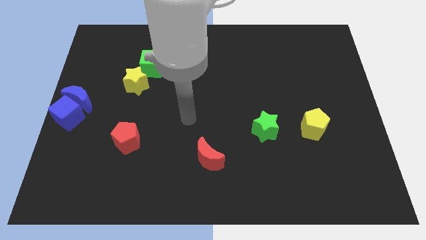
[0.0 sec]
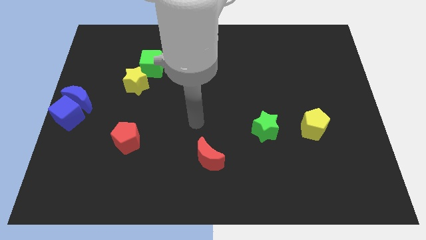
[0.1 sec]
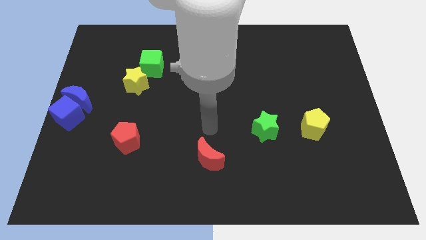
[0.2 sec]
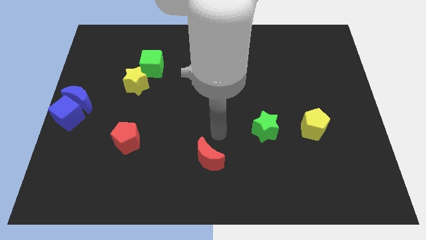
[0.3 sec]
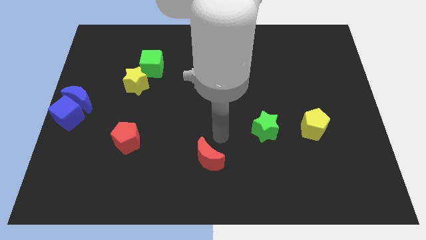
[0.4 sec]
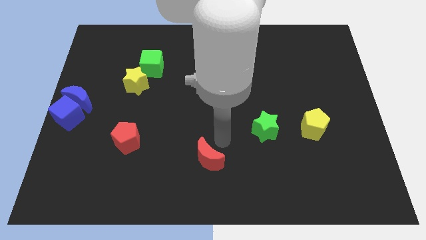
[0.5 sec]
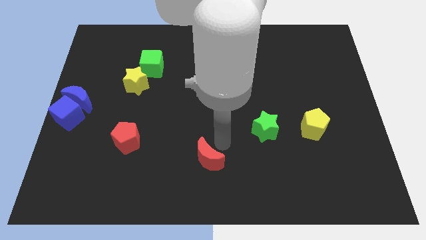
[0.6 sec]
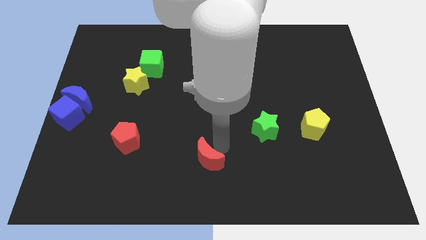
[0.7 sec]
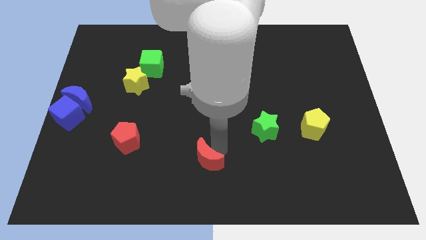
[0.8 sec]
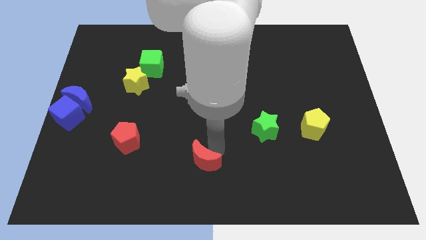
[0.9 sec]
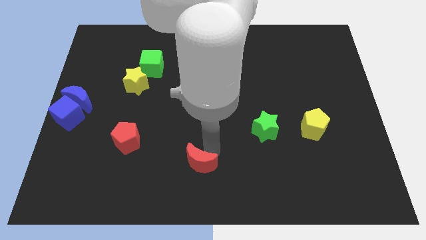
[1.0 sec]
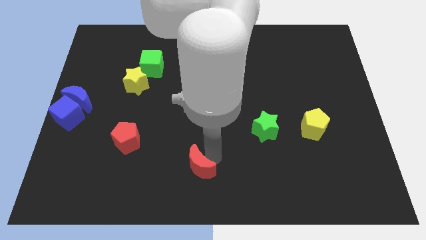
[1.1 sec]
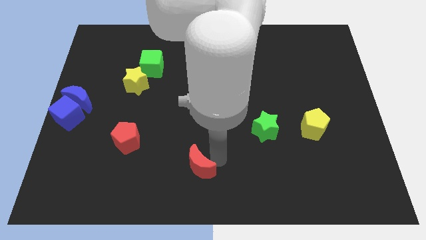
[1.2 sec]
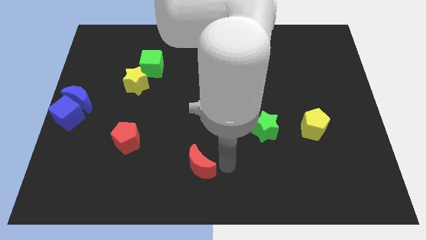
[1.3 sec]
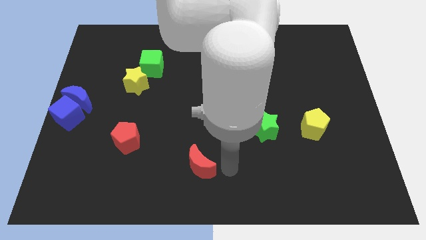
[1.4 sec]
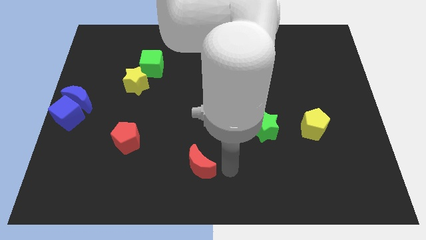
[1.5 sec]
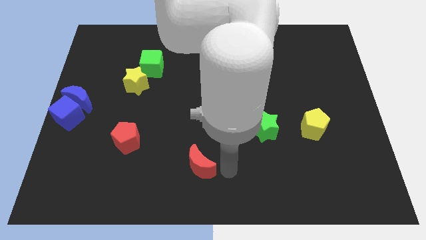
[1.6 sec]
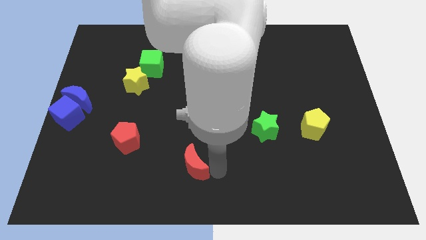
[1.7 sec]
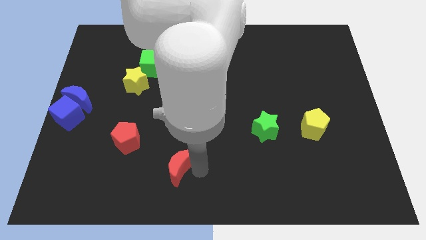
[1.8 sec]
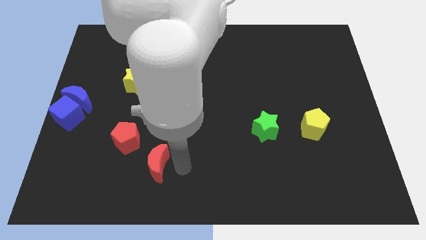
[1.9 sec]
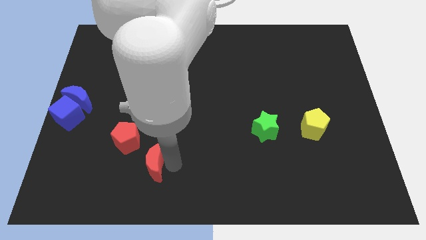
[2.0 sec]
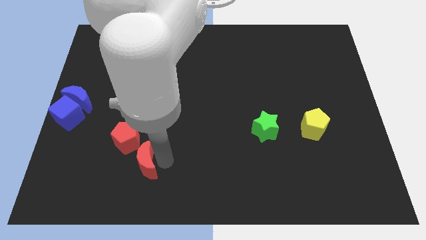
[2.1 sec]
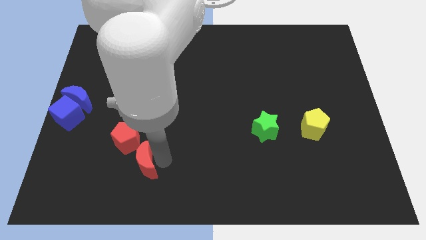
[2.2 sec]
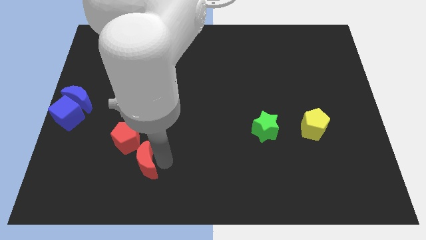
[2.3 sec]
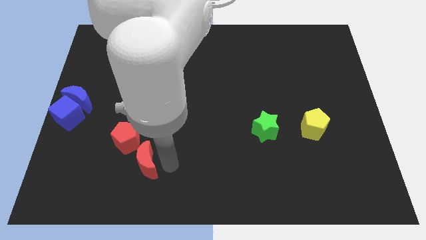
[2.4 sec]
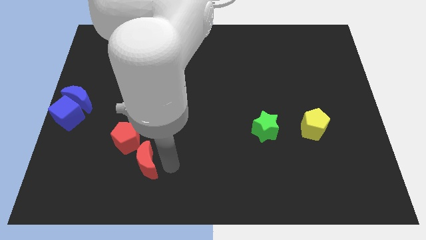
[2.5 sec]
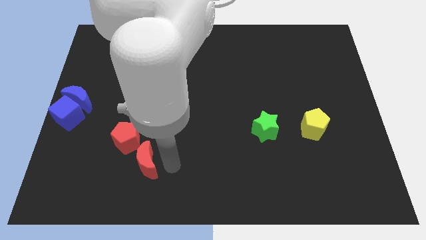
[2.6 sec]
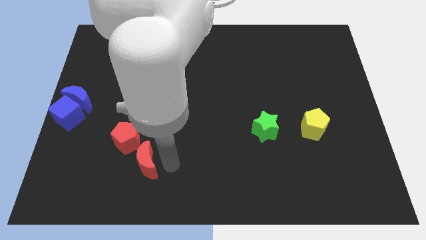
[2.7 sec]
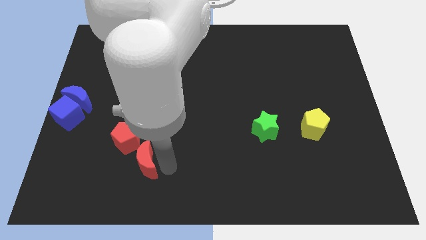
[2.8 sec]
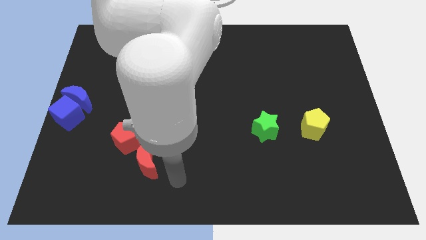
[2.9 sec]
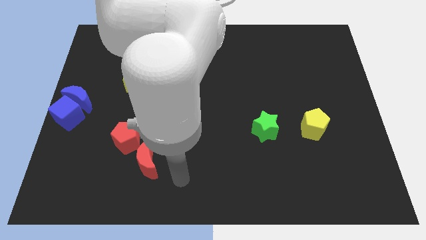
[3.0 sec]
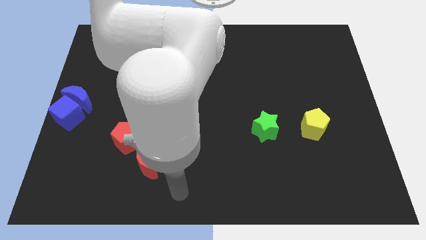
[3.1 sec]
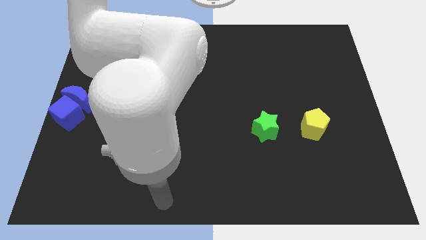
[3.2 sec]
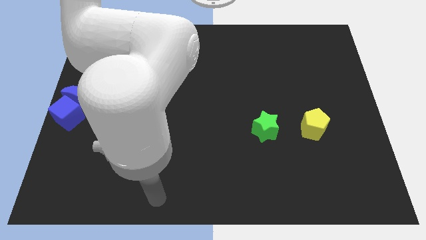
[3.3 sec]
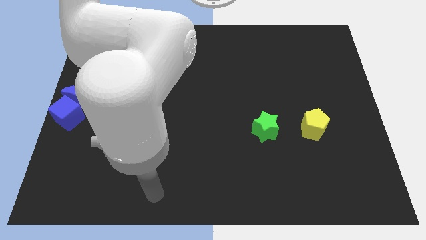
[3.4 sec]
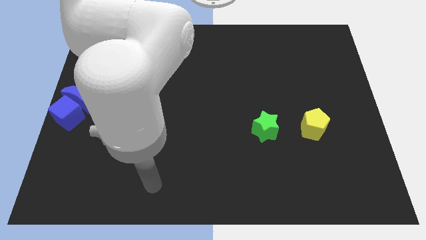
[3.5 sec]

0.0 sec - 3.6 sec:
move the red moon near the red pentagon

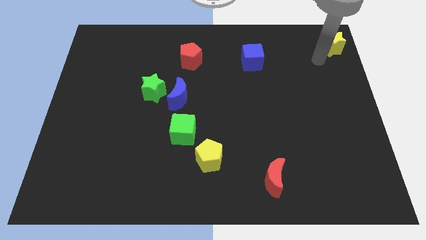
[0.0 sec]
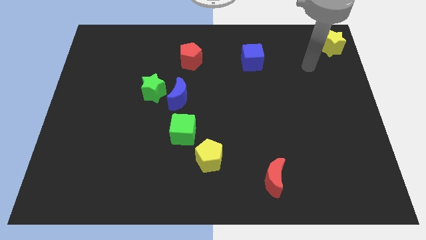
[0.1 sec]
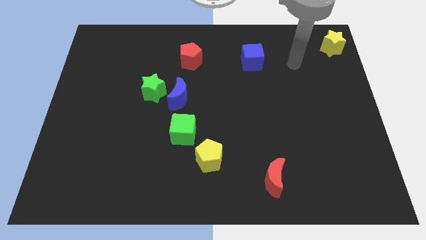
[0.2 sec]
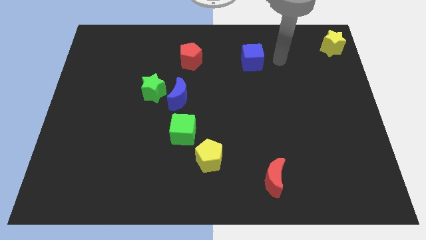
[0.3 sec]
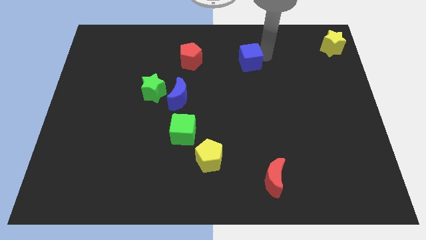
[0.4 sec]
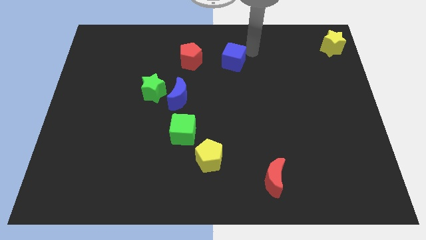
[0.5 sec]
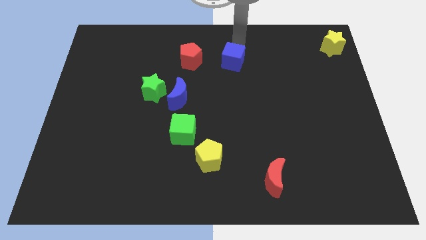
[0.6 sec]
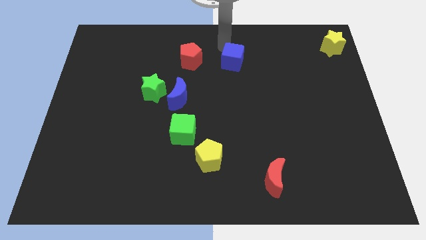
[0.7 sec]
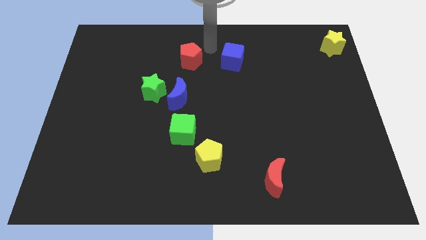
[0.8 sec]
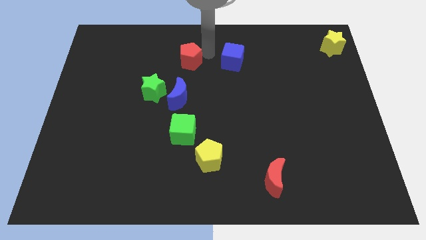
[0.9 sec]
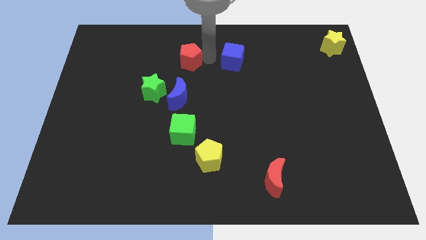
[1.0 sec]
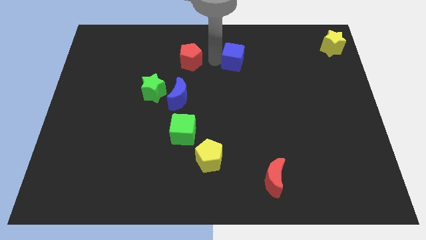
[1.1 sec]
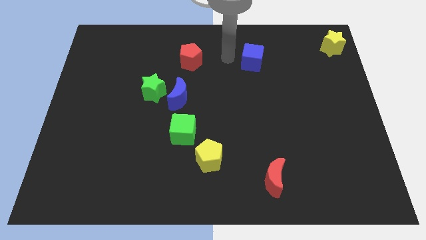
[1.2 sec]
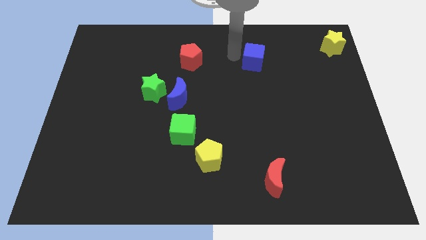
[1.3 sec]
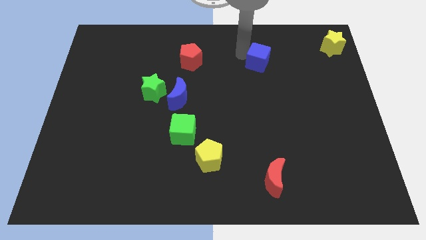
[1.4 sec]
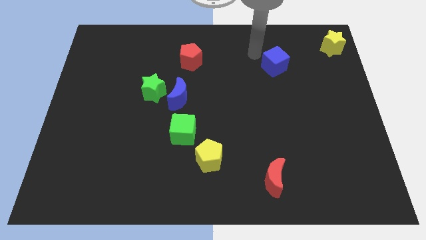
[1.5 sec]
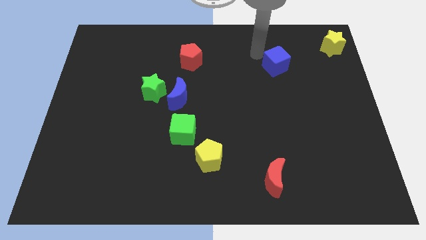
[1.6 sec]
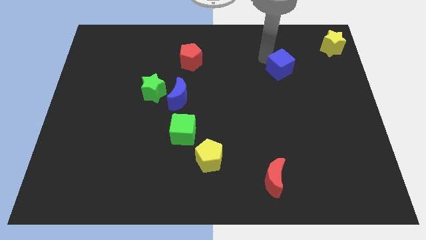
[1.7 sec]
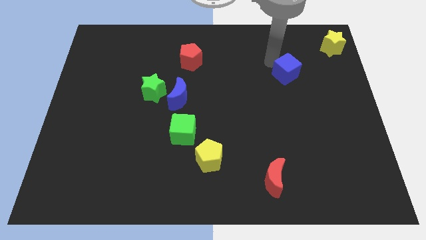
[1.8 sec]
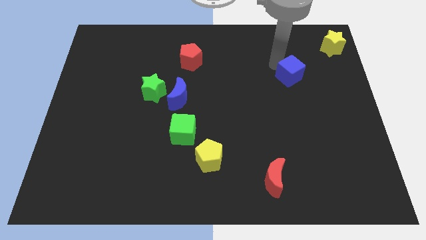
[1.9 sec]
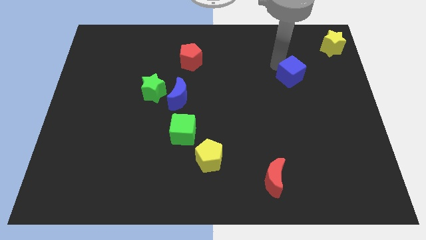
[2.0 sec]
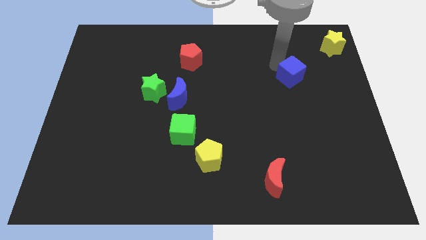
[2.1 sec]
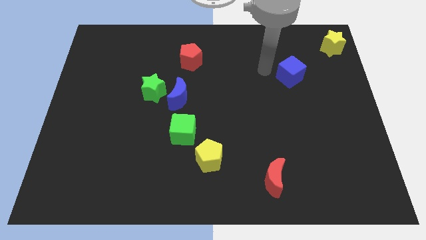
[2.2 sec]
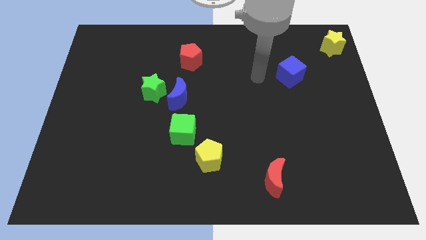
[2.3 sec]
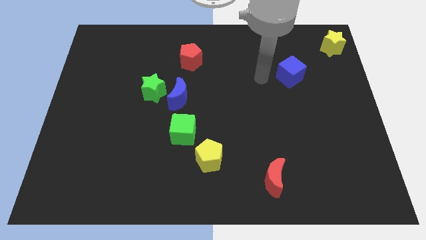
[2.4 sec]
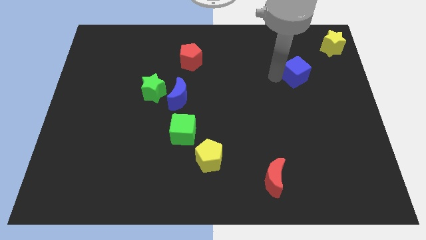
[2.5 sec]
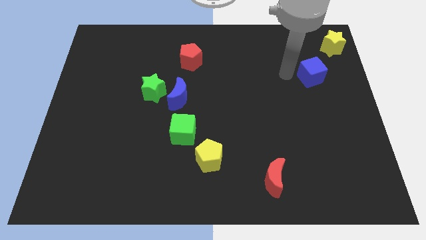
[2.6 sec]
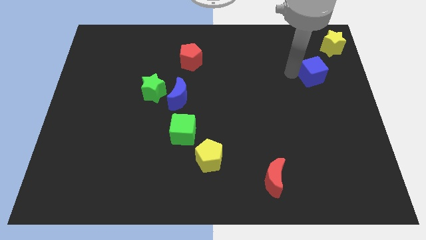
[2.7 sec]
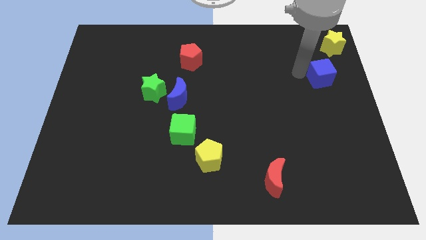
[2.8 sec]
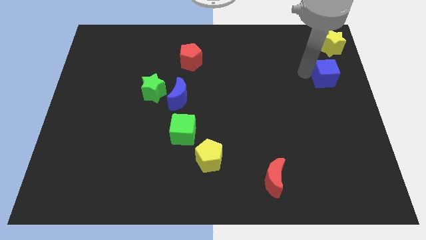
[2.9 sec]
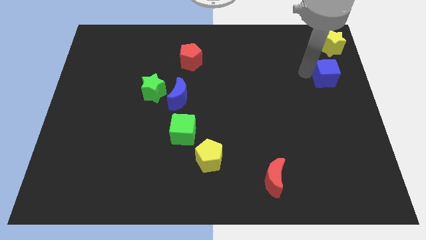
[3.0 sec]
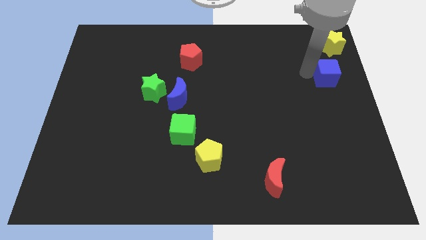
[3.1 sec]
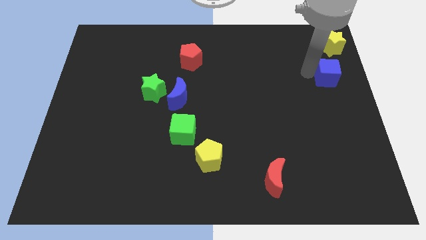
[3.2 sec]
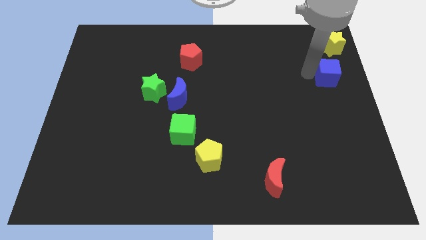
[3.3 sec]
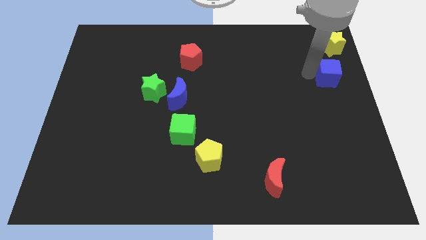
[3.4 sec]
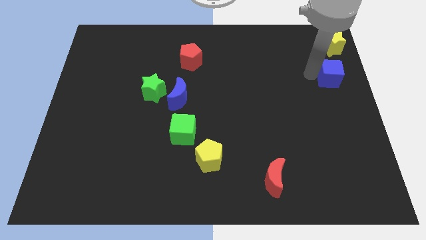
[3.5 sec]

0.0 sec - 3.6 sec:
place blue cube to the bottom of yellow star

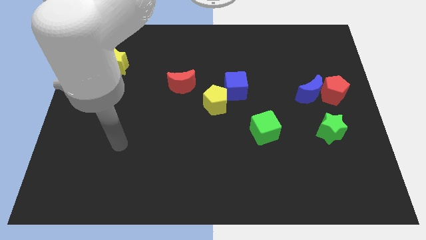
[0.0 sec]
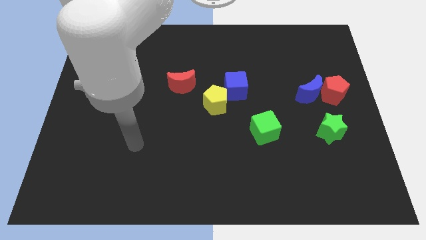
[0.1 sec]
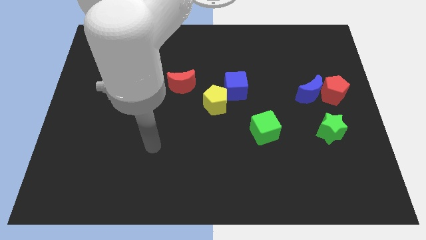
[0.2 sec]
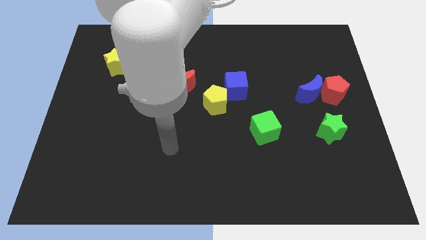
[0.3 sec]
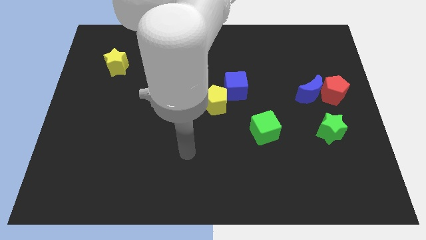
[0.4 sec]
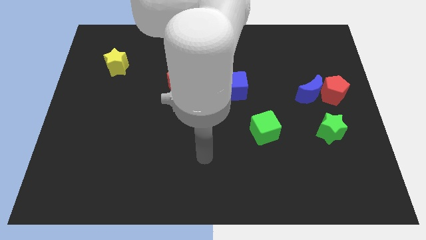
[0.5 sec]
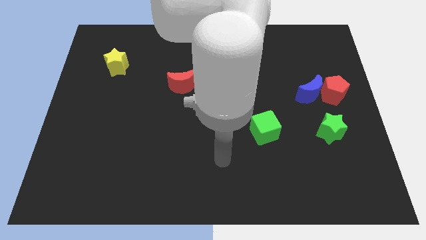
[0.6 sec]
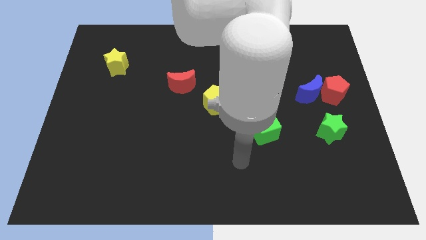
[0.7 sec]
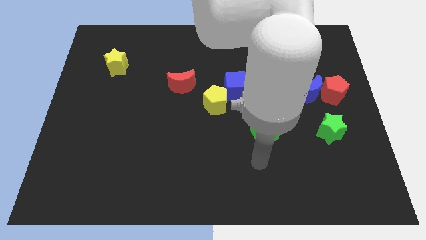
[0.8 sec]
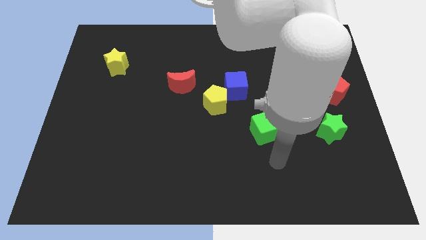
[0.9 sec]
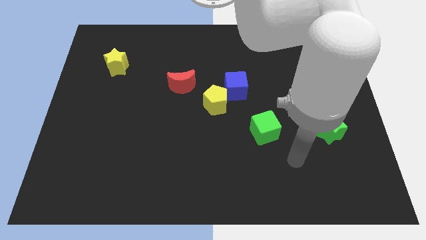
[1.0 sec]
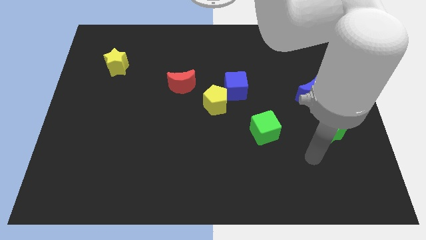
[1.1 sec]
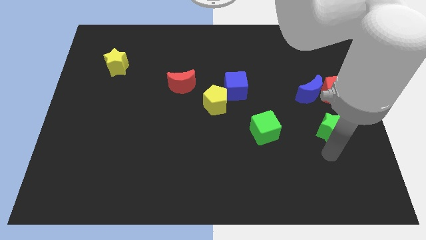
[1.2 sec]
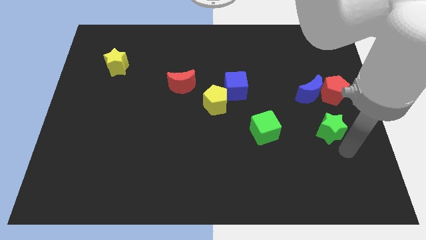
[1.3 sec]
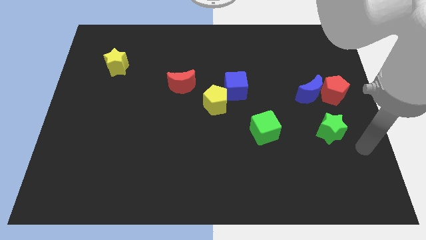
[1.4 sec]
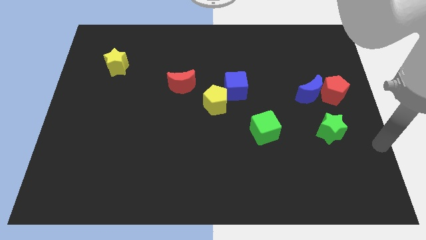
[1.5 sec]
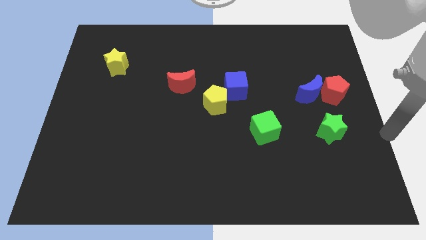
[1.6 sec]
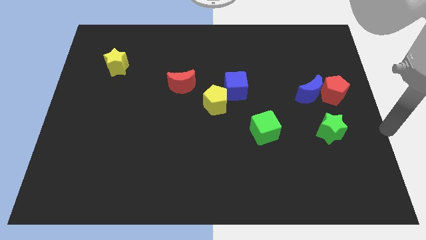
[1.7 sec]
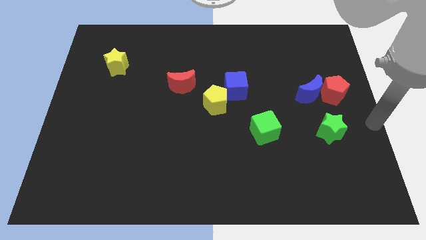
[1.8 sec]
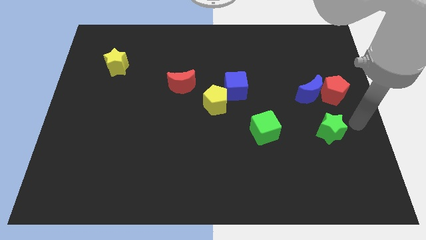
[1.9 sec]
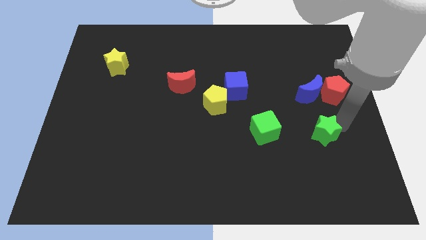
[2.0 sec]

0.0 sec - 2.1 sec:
move the green star slightly to the left
